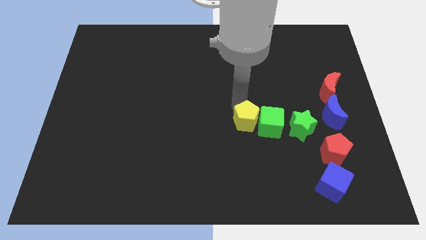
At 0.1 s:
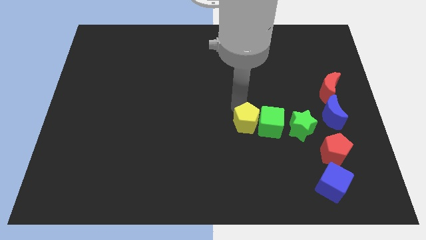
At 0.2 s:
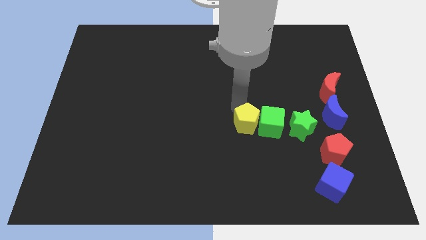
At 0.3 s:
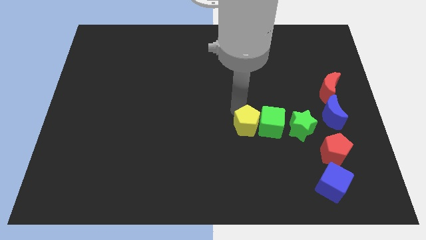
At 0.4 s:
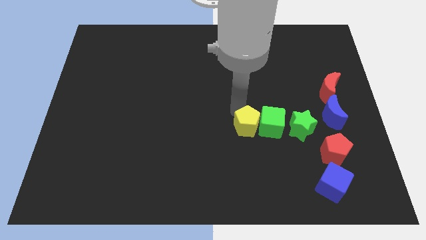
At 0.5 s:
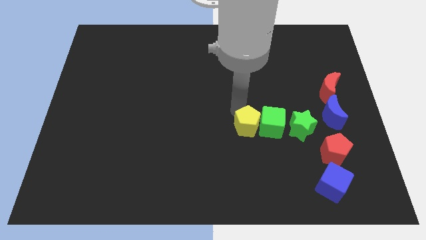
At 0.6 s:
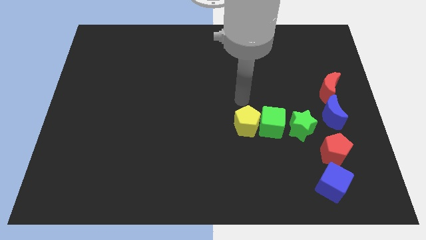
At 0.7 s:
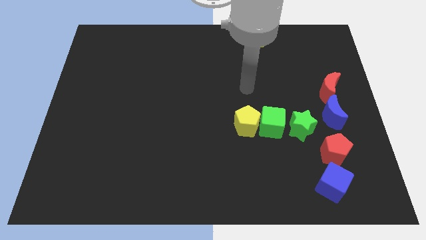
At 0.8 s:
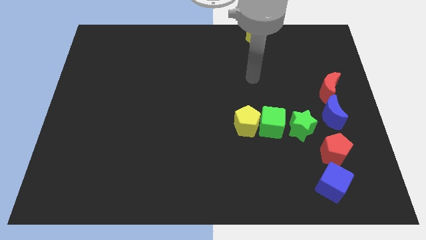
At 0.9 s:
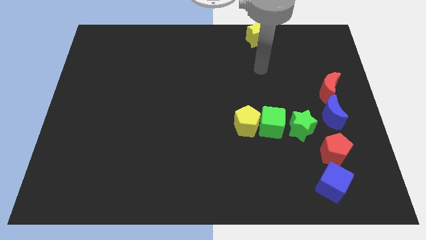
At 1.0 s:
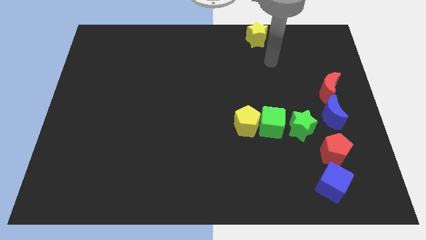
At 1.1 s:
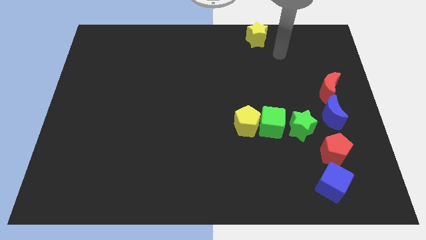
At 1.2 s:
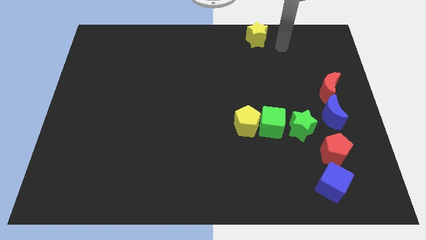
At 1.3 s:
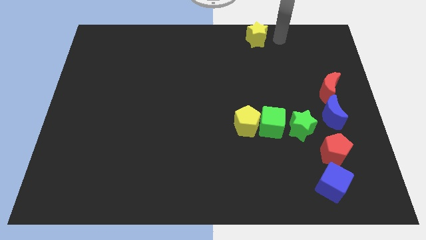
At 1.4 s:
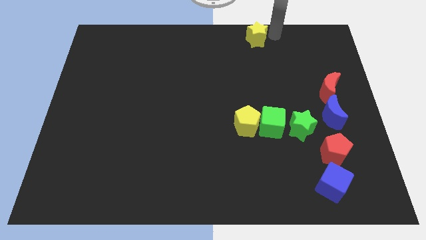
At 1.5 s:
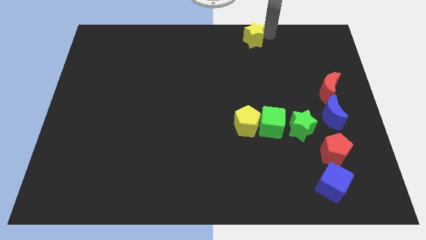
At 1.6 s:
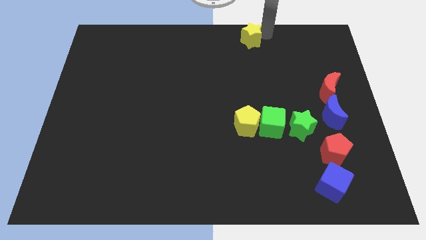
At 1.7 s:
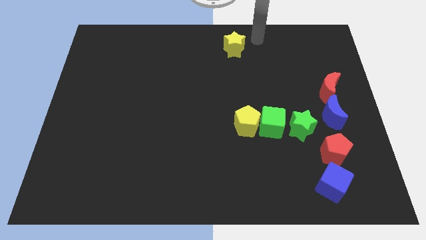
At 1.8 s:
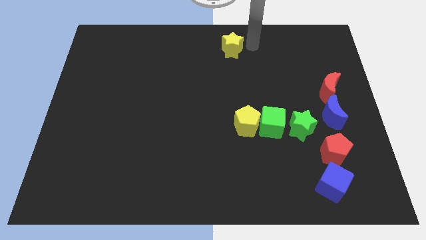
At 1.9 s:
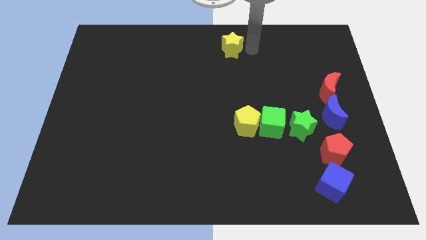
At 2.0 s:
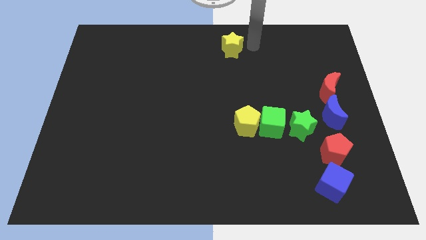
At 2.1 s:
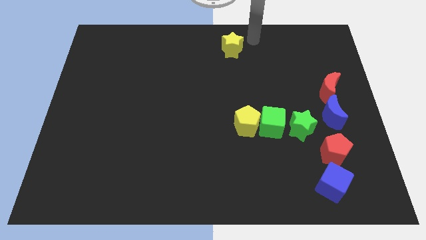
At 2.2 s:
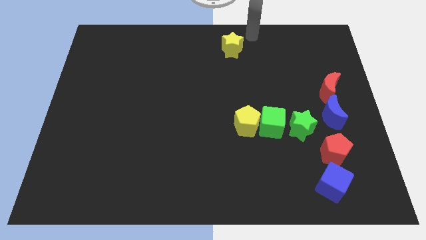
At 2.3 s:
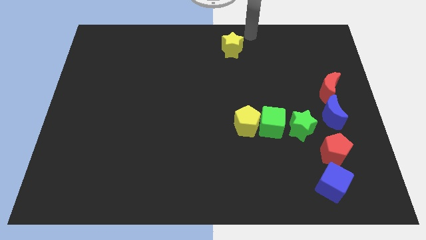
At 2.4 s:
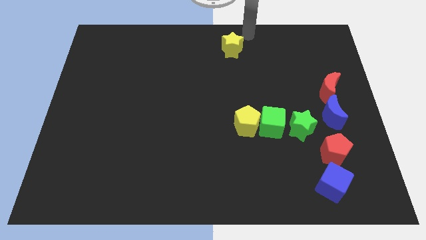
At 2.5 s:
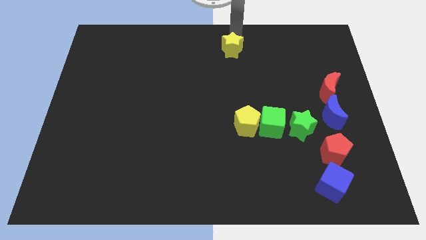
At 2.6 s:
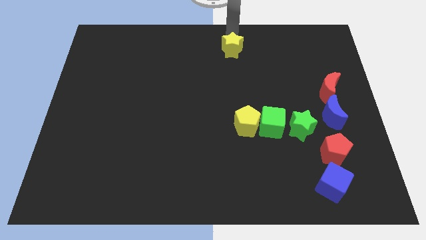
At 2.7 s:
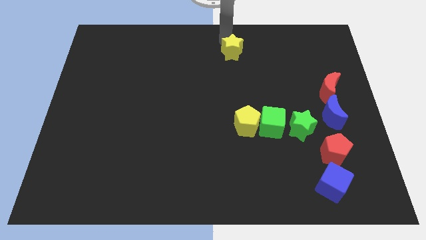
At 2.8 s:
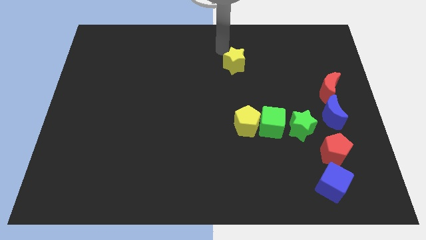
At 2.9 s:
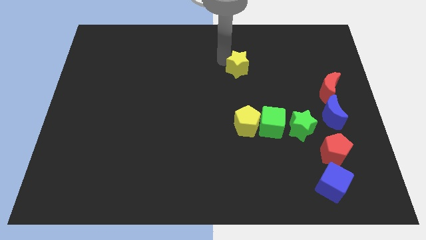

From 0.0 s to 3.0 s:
slightly push the yellow star downward

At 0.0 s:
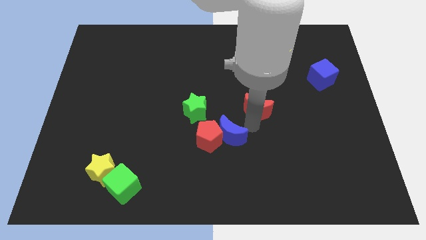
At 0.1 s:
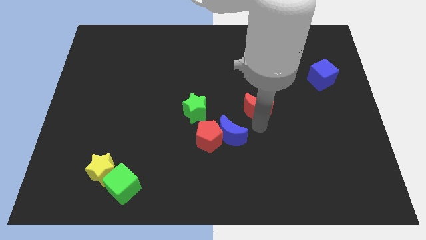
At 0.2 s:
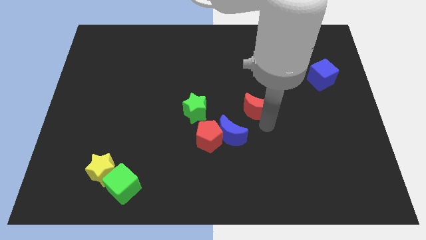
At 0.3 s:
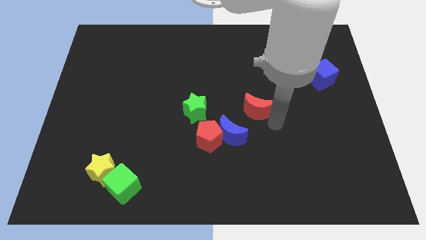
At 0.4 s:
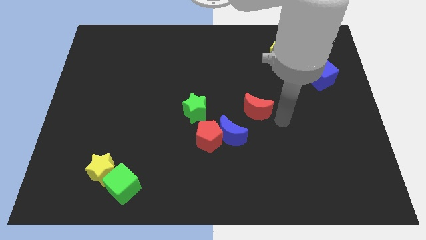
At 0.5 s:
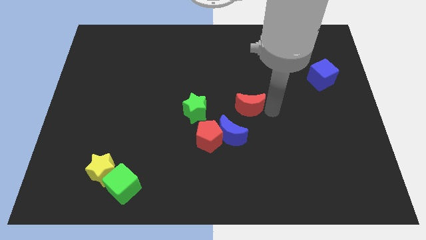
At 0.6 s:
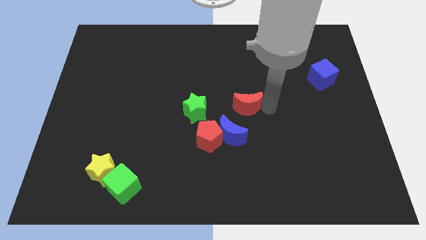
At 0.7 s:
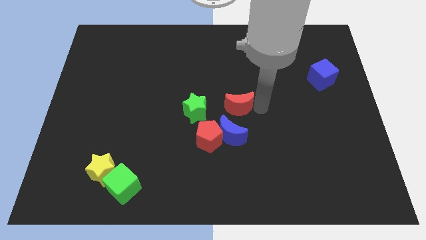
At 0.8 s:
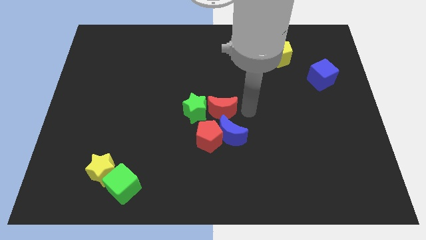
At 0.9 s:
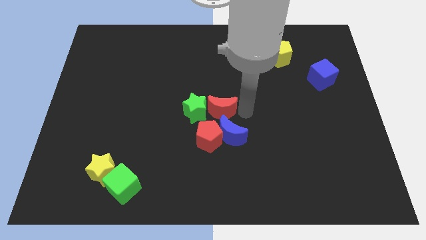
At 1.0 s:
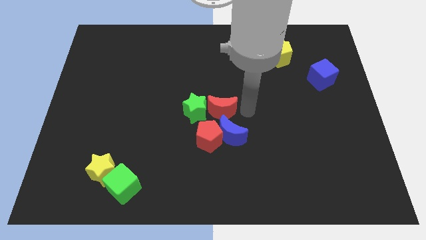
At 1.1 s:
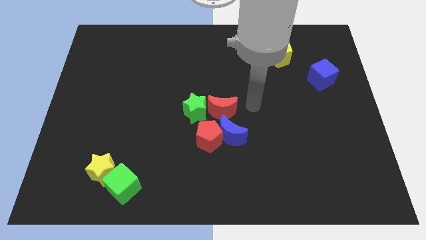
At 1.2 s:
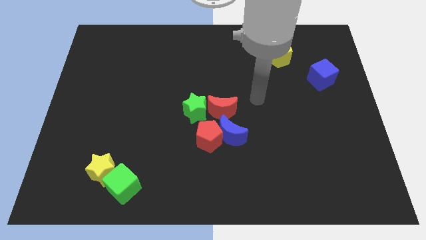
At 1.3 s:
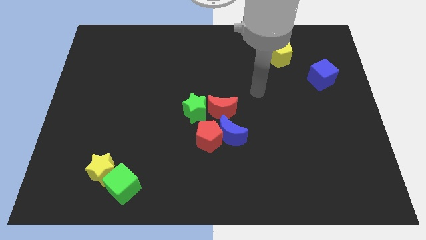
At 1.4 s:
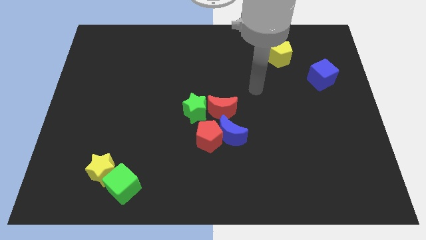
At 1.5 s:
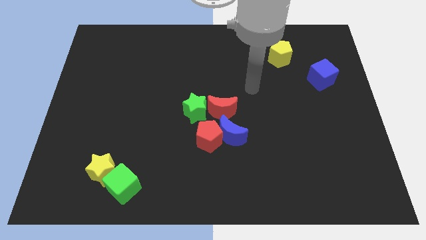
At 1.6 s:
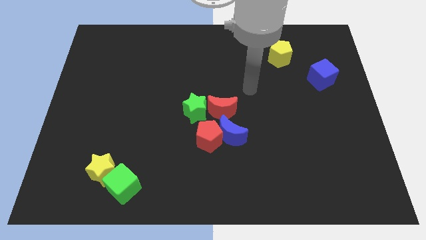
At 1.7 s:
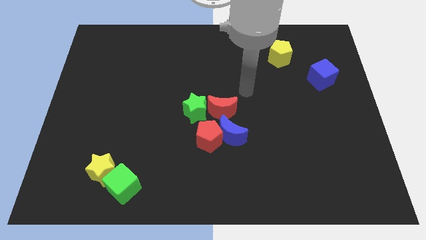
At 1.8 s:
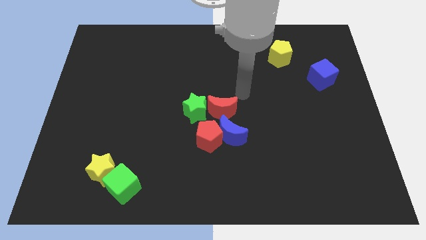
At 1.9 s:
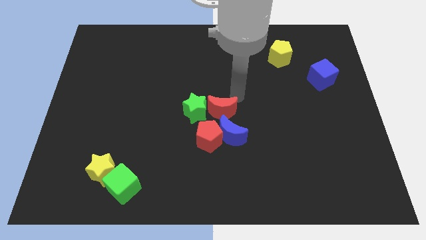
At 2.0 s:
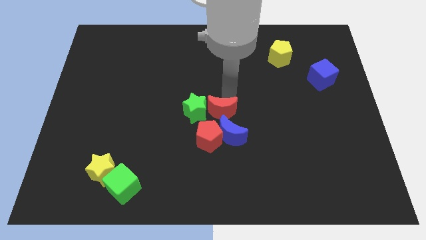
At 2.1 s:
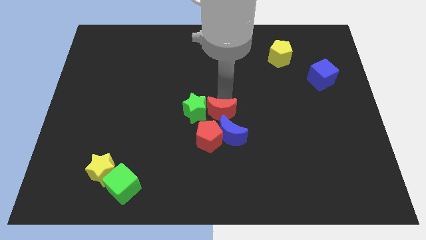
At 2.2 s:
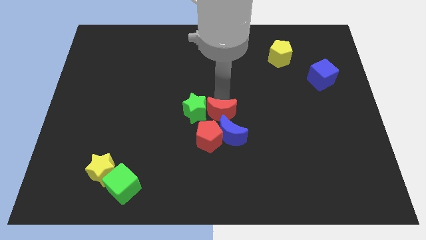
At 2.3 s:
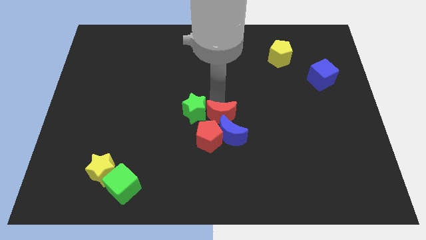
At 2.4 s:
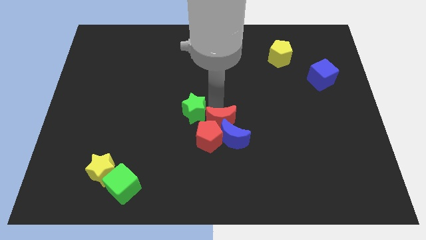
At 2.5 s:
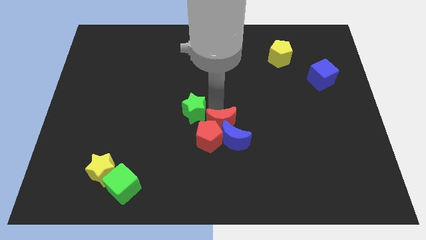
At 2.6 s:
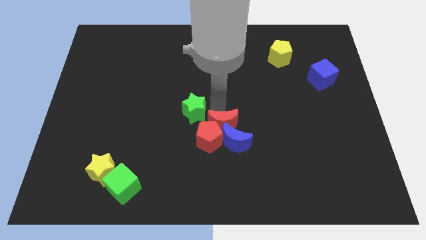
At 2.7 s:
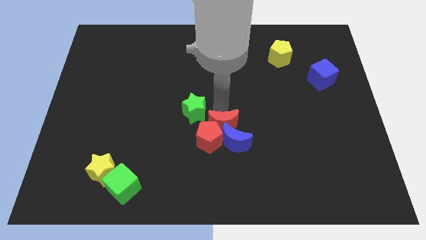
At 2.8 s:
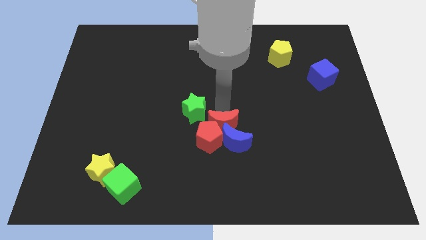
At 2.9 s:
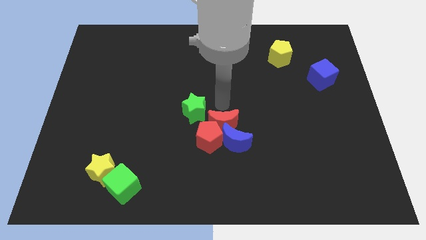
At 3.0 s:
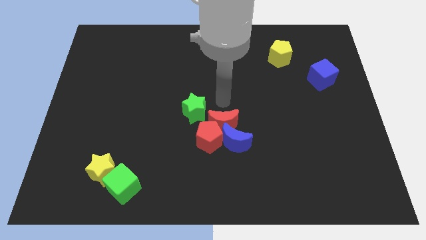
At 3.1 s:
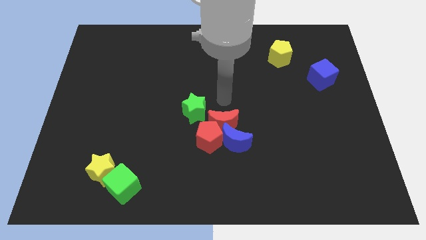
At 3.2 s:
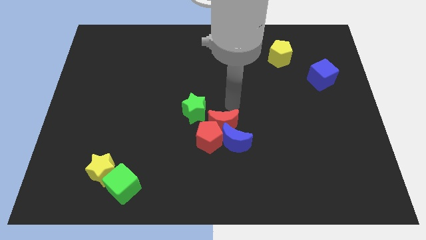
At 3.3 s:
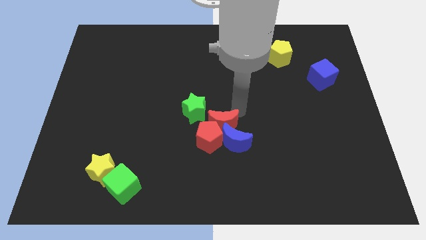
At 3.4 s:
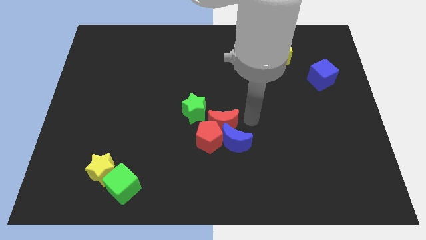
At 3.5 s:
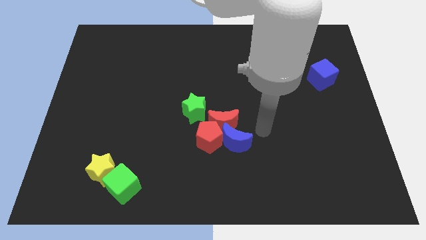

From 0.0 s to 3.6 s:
push the red moon into the group of blocks

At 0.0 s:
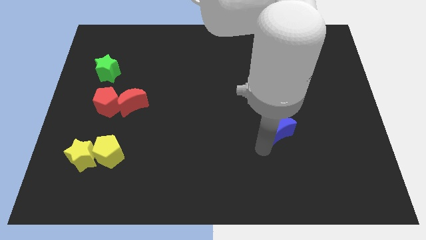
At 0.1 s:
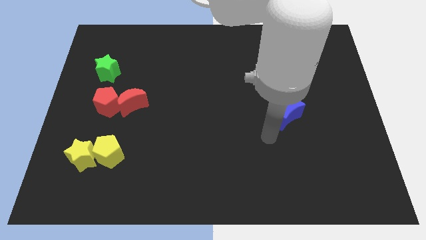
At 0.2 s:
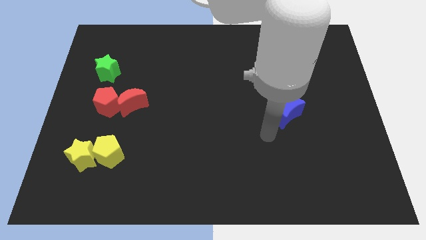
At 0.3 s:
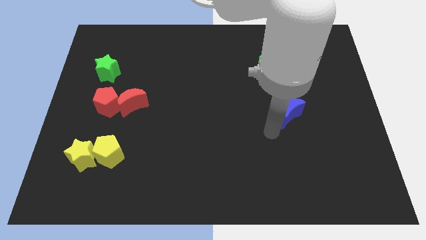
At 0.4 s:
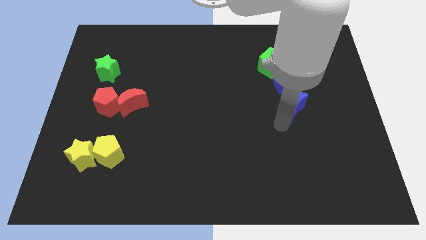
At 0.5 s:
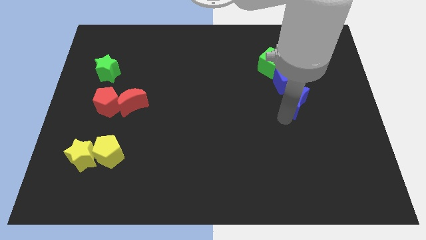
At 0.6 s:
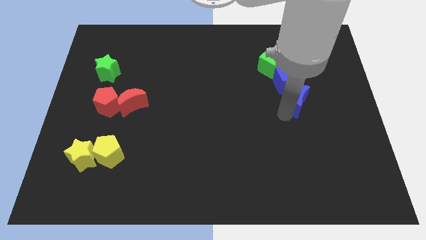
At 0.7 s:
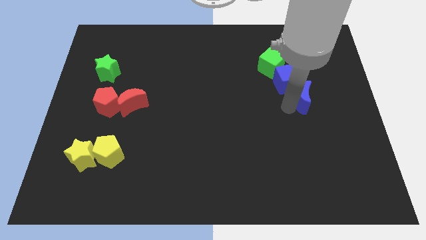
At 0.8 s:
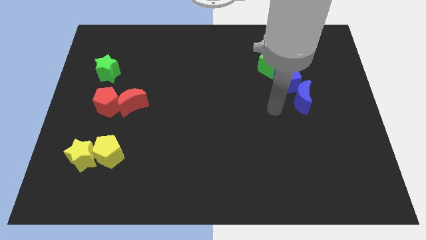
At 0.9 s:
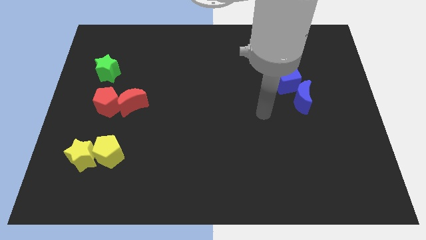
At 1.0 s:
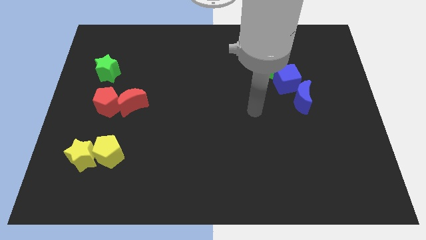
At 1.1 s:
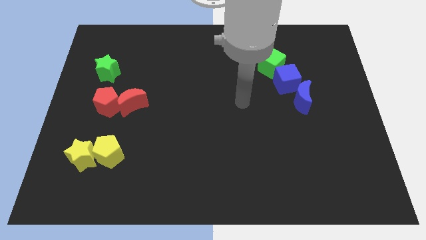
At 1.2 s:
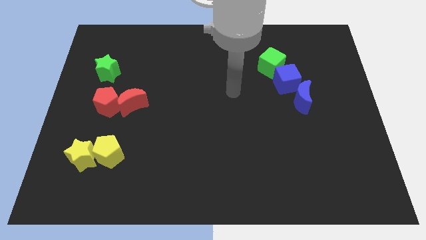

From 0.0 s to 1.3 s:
drag the blue moon into the blue cube

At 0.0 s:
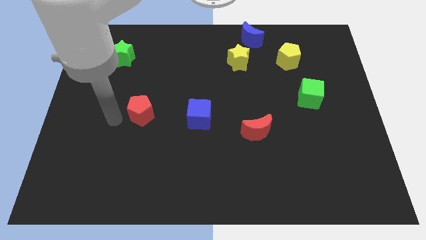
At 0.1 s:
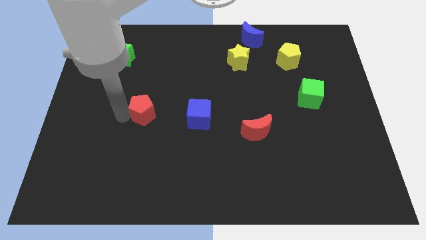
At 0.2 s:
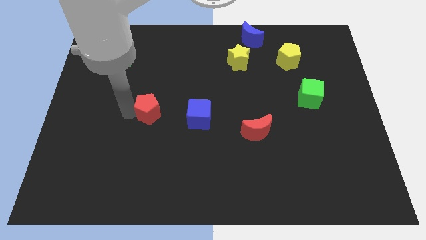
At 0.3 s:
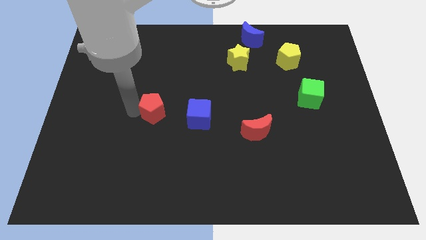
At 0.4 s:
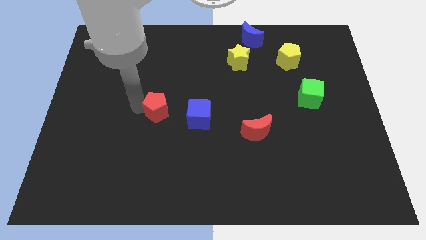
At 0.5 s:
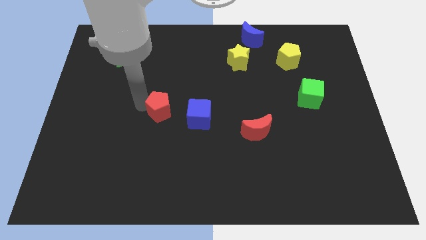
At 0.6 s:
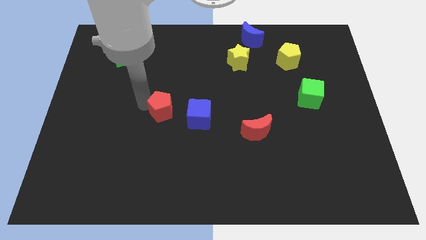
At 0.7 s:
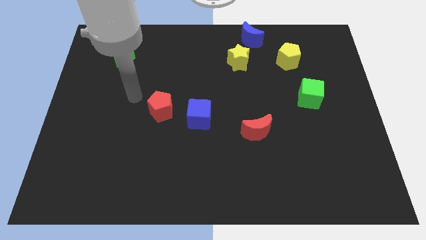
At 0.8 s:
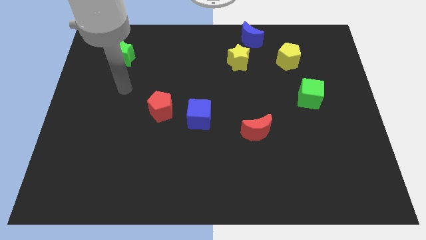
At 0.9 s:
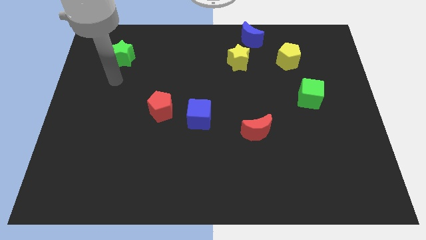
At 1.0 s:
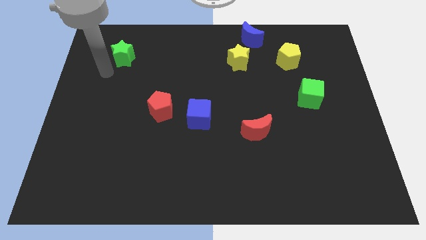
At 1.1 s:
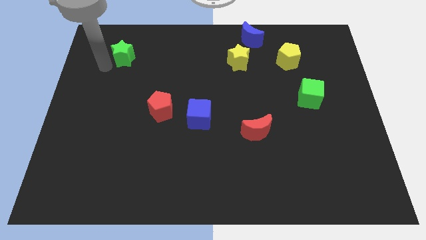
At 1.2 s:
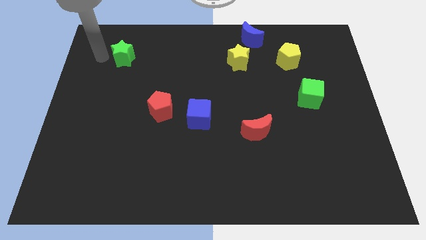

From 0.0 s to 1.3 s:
push the red pentagon towards the blue cube
